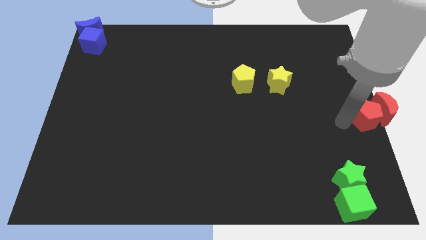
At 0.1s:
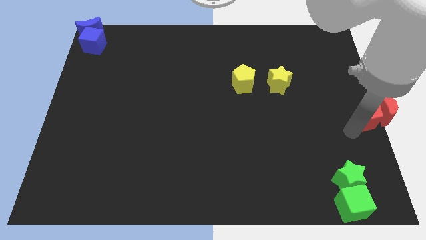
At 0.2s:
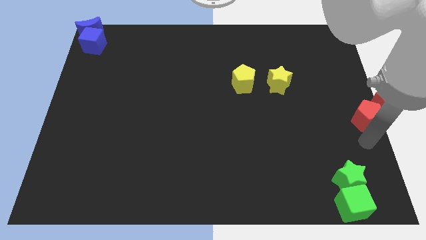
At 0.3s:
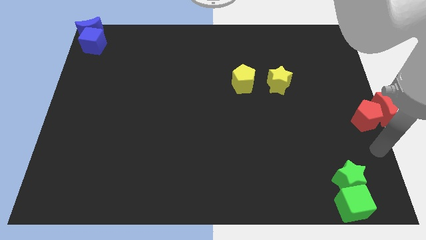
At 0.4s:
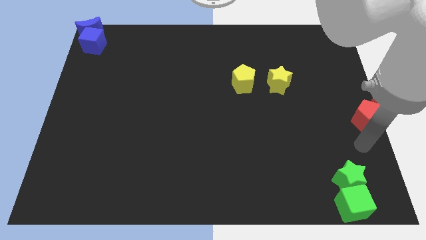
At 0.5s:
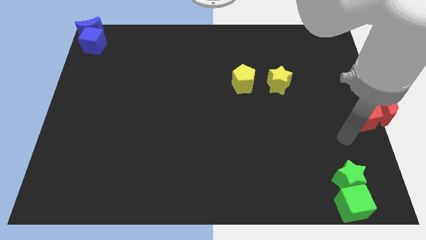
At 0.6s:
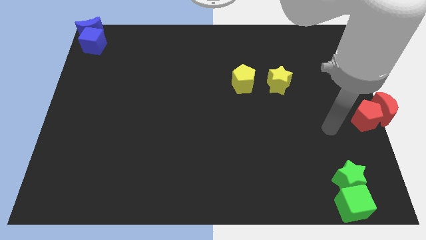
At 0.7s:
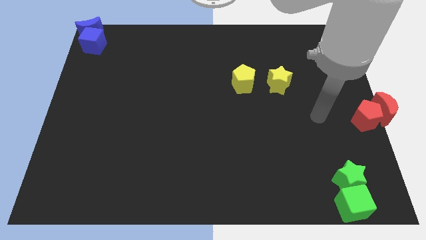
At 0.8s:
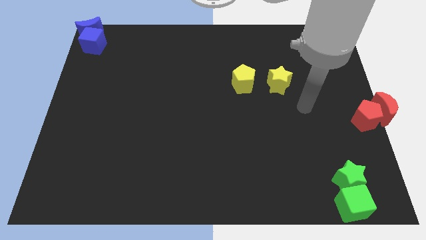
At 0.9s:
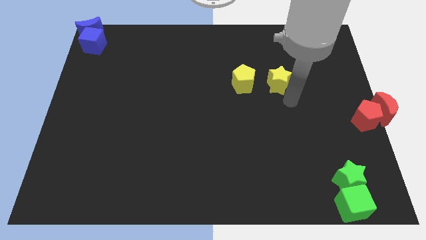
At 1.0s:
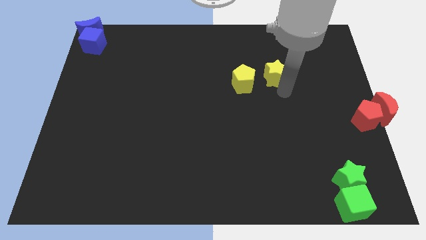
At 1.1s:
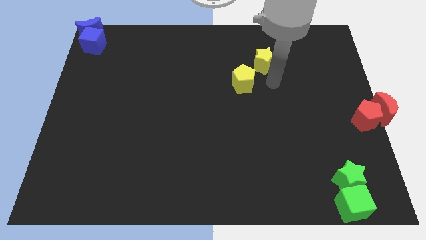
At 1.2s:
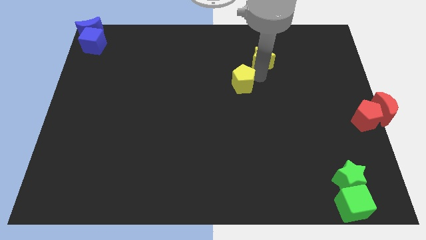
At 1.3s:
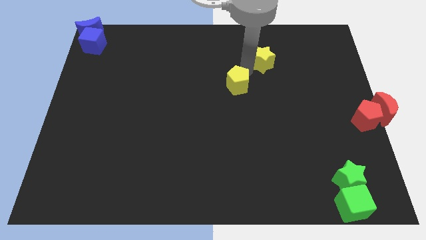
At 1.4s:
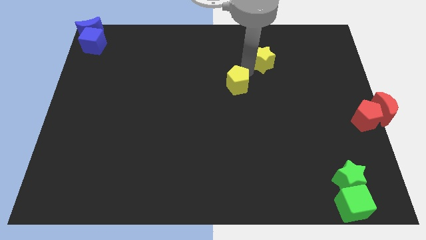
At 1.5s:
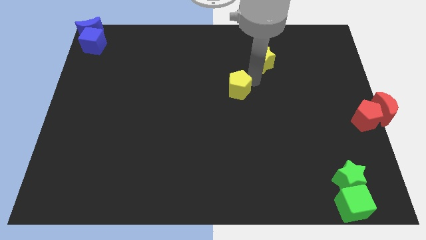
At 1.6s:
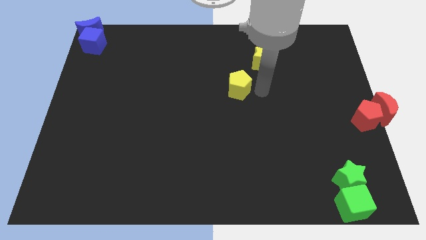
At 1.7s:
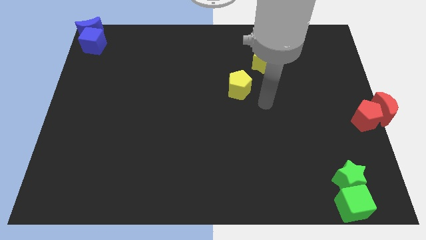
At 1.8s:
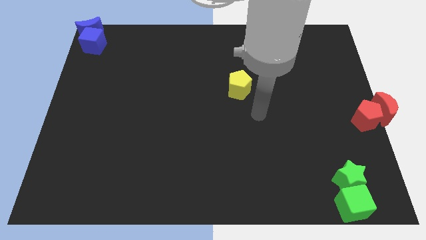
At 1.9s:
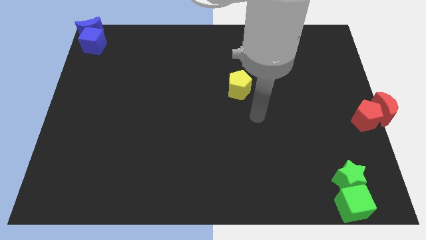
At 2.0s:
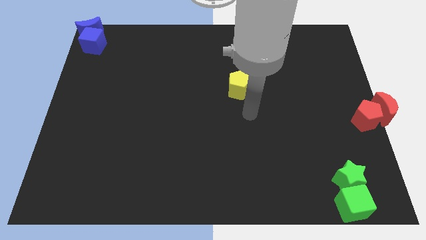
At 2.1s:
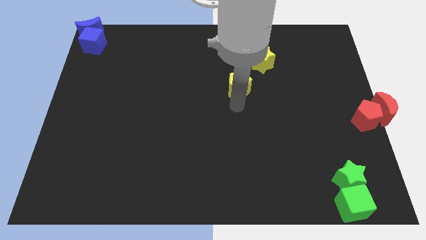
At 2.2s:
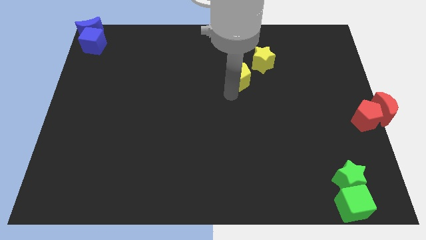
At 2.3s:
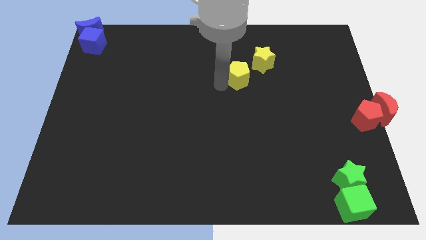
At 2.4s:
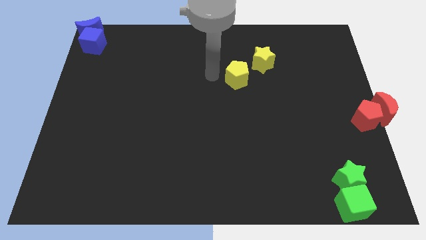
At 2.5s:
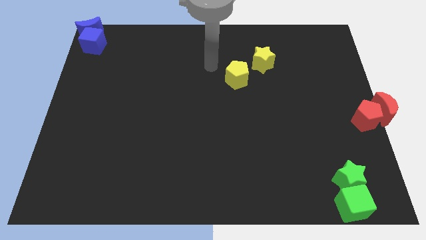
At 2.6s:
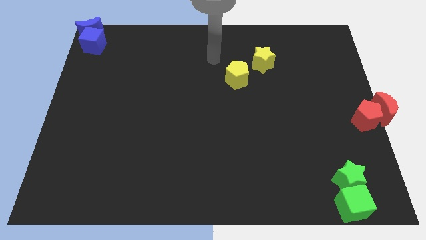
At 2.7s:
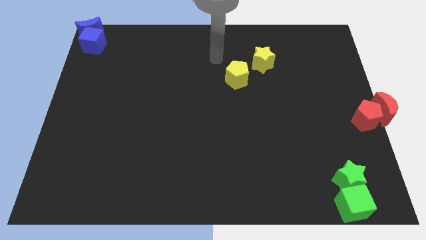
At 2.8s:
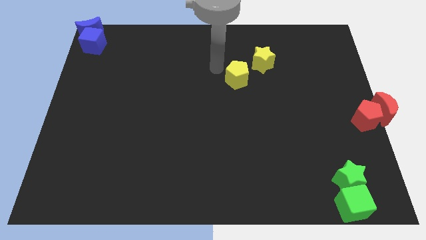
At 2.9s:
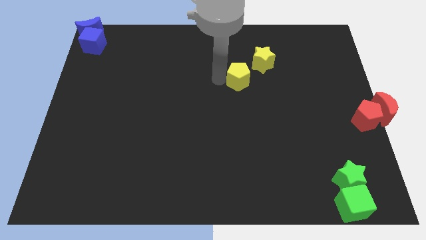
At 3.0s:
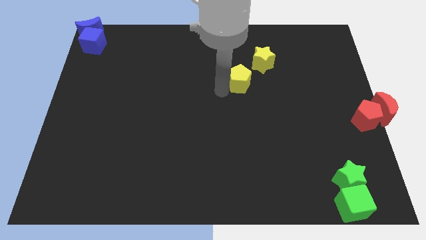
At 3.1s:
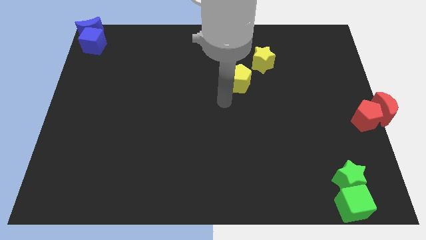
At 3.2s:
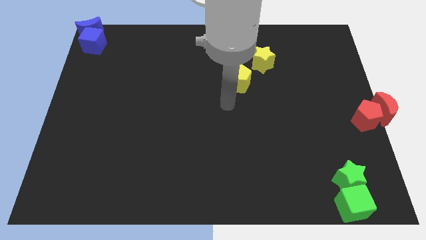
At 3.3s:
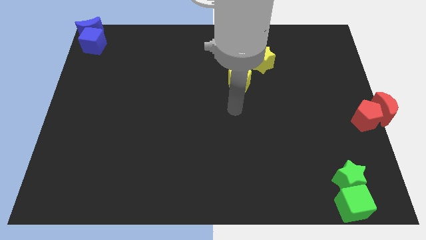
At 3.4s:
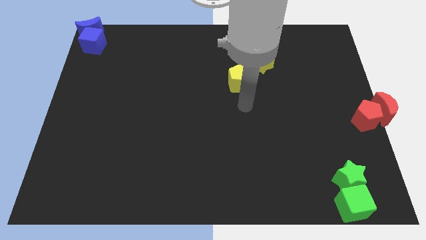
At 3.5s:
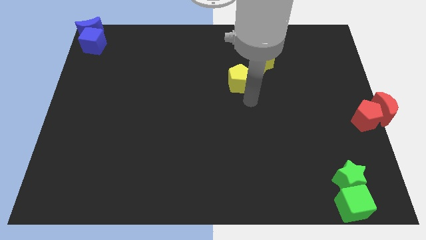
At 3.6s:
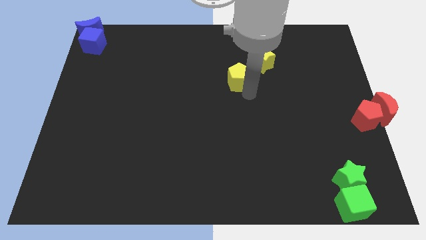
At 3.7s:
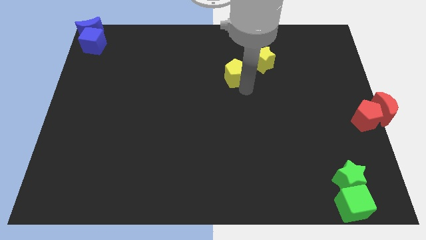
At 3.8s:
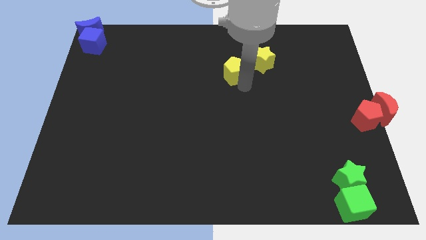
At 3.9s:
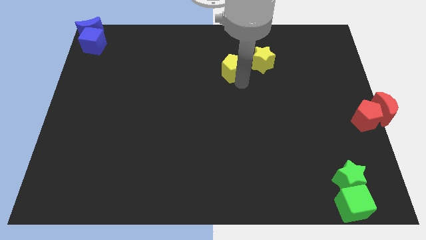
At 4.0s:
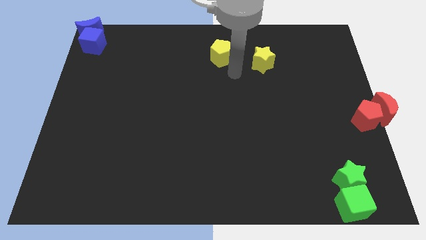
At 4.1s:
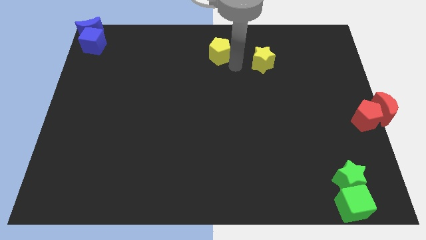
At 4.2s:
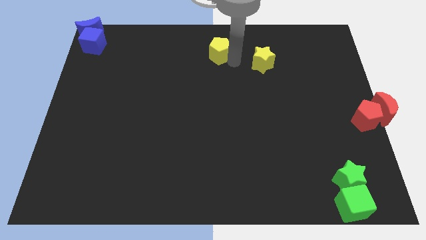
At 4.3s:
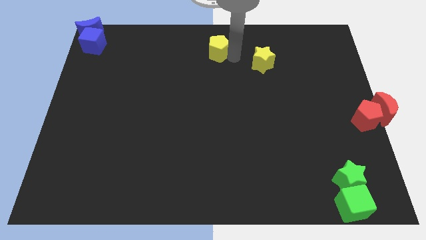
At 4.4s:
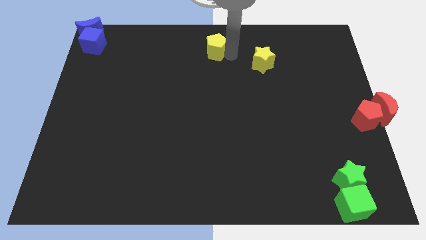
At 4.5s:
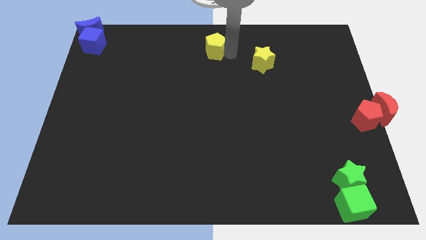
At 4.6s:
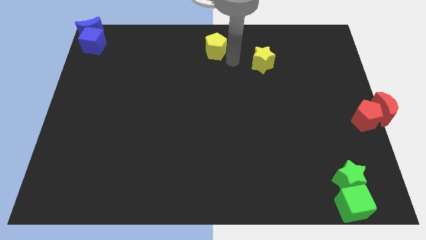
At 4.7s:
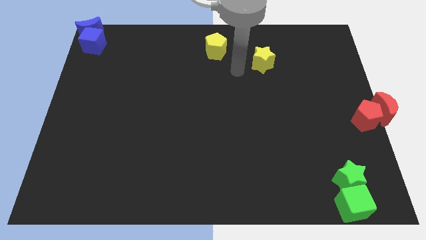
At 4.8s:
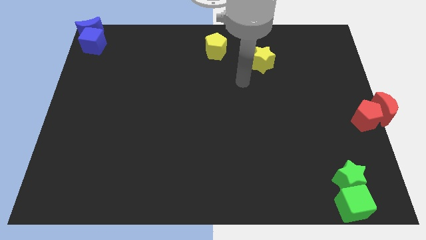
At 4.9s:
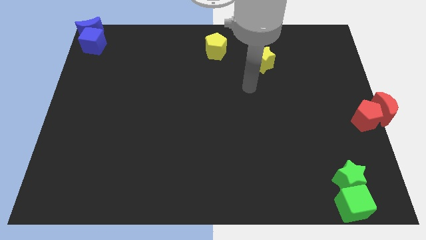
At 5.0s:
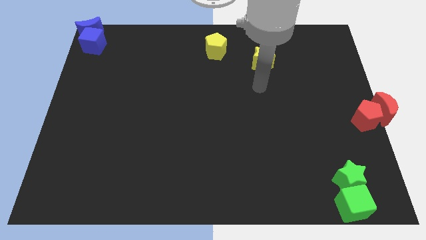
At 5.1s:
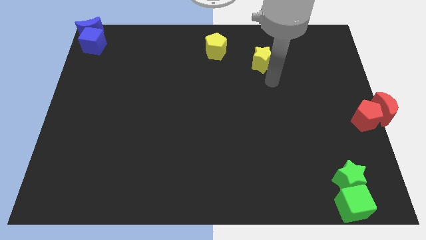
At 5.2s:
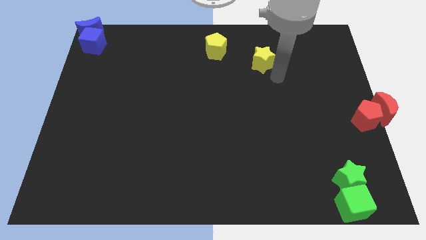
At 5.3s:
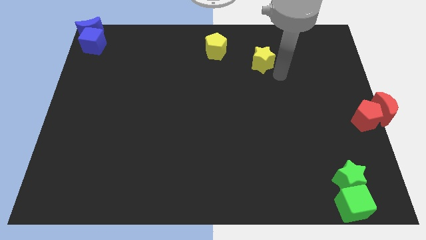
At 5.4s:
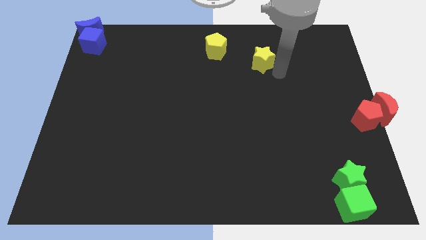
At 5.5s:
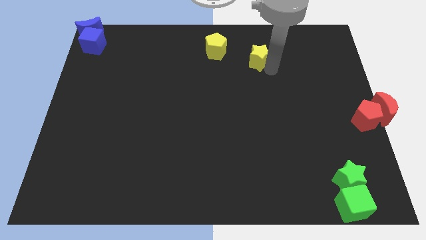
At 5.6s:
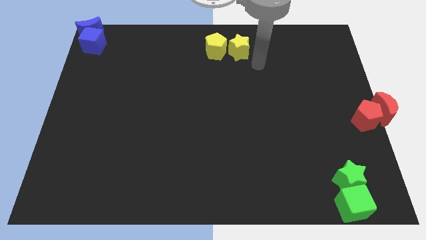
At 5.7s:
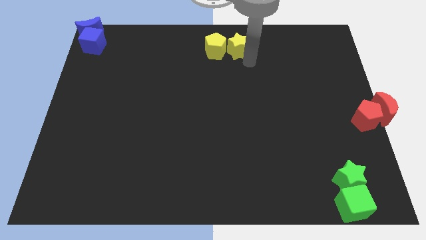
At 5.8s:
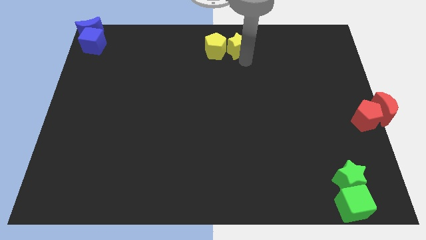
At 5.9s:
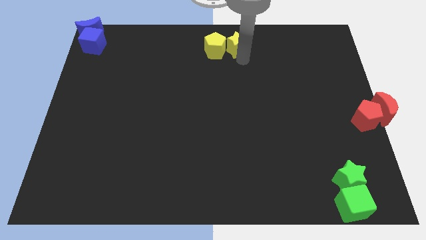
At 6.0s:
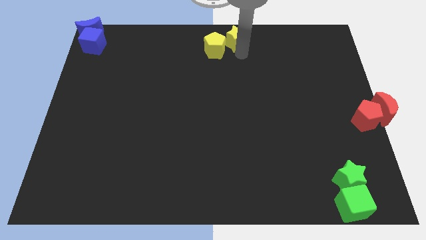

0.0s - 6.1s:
move the yellow blocks to the top center

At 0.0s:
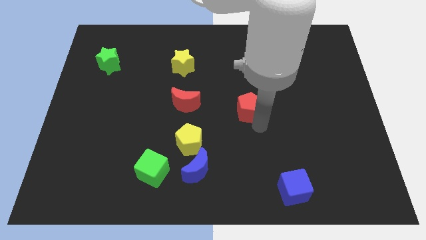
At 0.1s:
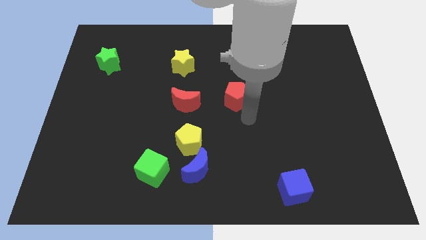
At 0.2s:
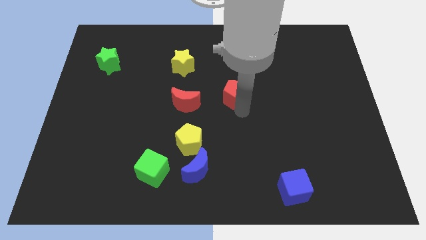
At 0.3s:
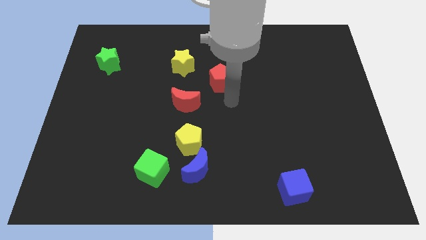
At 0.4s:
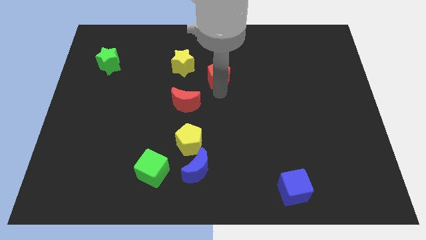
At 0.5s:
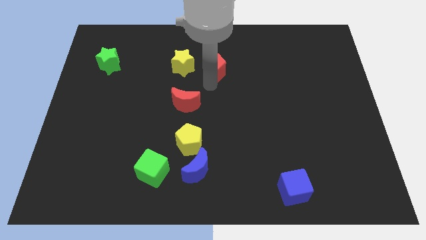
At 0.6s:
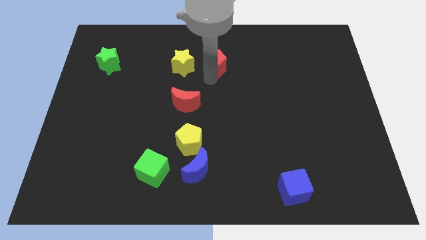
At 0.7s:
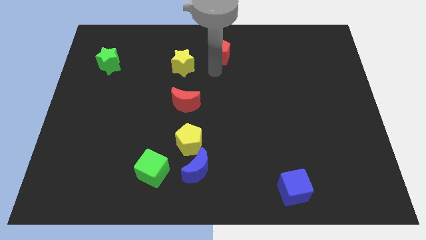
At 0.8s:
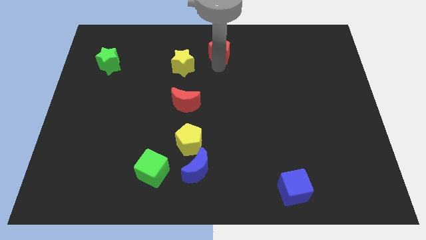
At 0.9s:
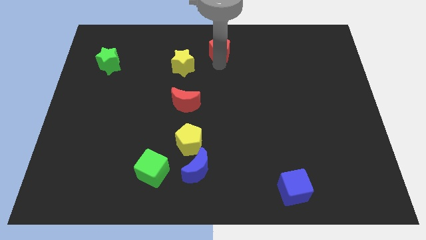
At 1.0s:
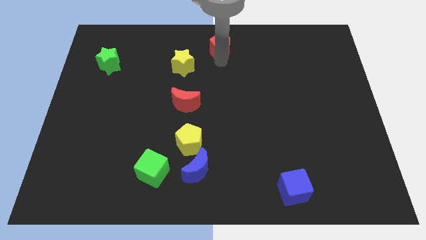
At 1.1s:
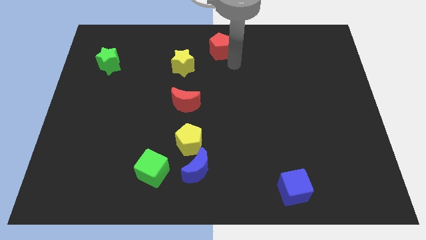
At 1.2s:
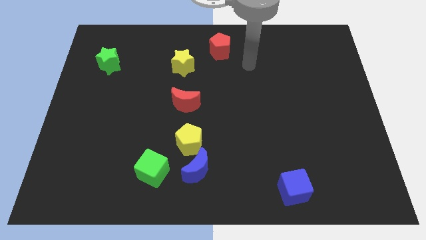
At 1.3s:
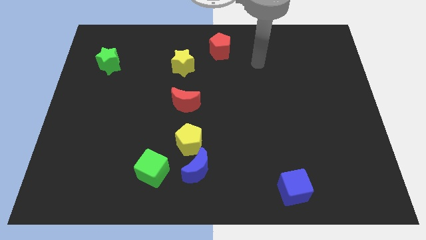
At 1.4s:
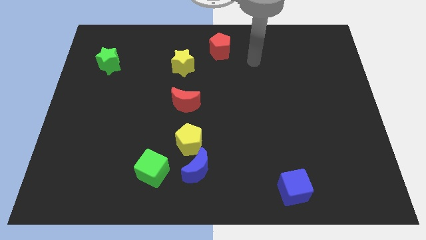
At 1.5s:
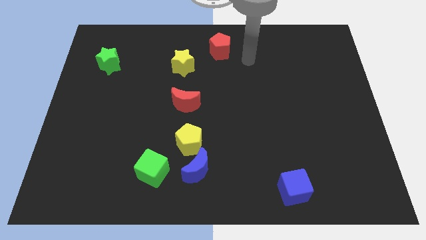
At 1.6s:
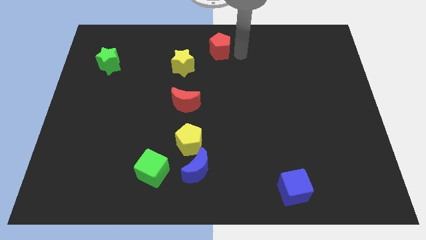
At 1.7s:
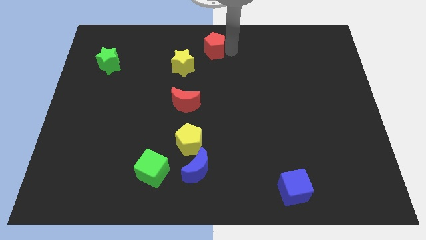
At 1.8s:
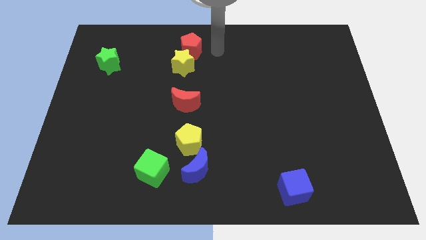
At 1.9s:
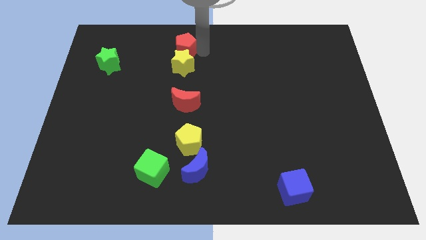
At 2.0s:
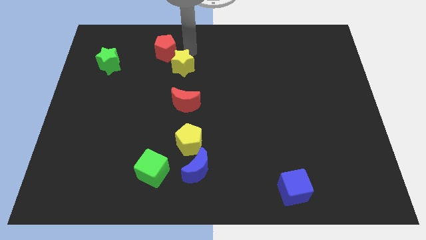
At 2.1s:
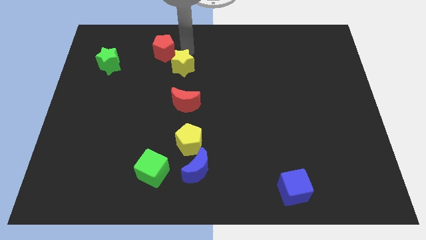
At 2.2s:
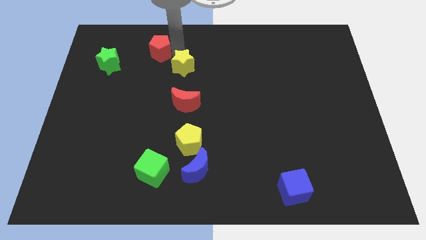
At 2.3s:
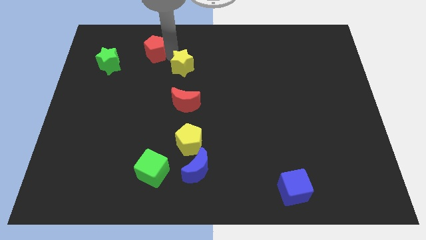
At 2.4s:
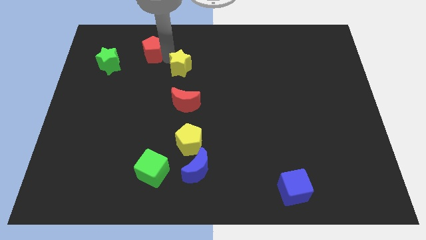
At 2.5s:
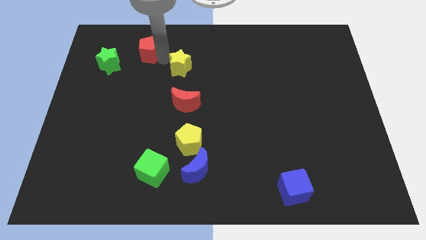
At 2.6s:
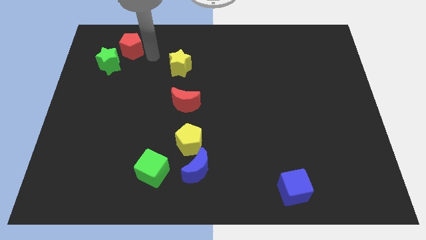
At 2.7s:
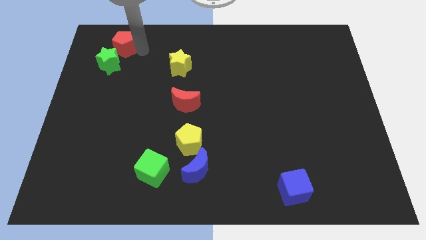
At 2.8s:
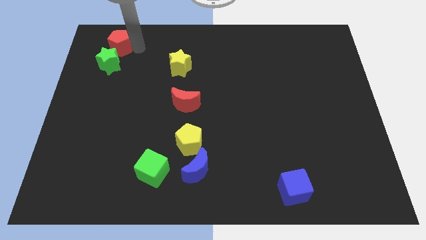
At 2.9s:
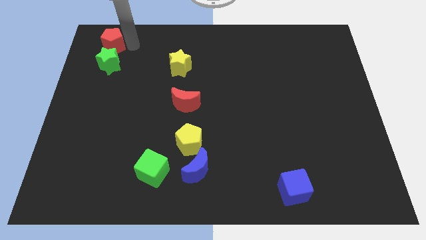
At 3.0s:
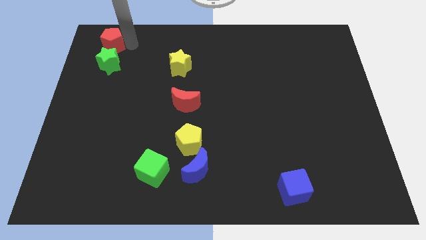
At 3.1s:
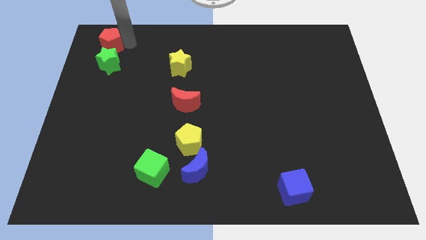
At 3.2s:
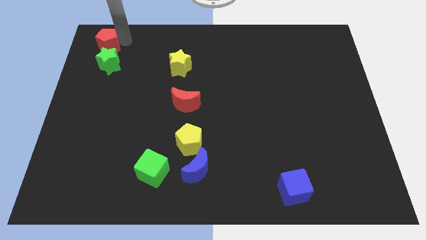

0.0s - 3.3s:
put red pentagon above green star
